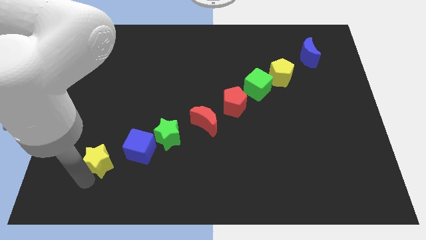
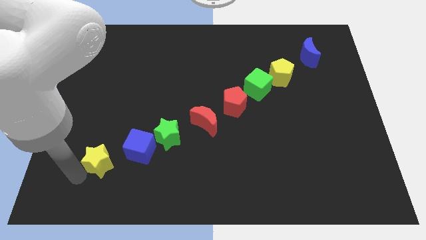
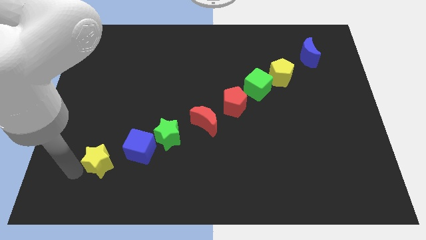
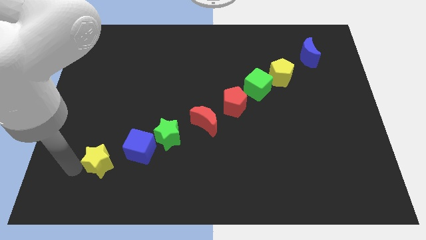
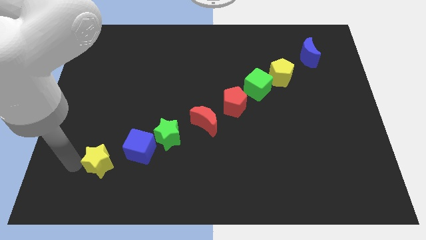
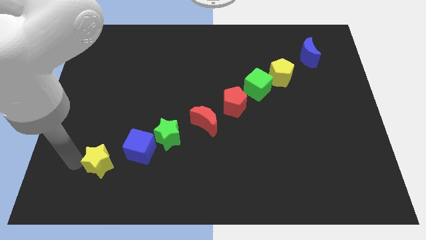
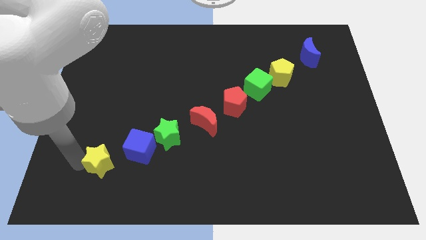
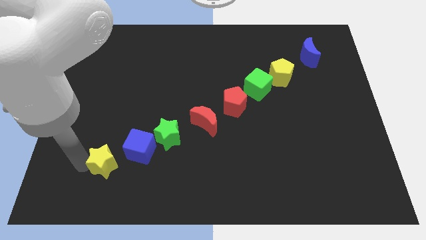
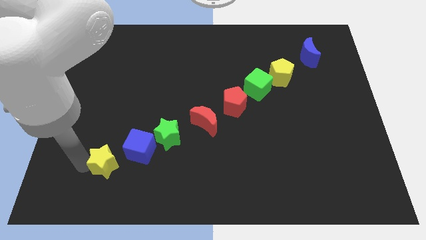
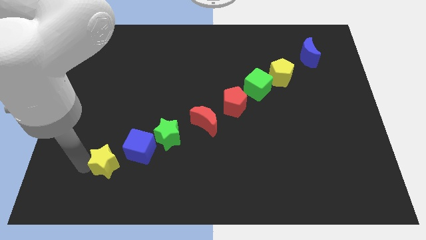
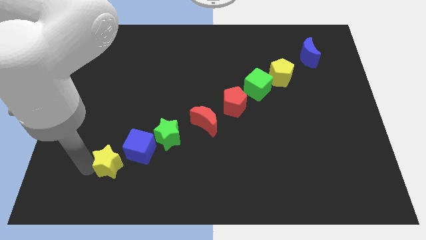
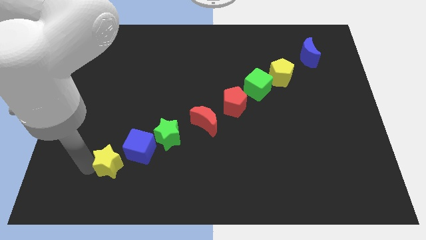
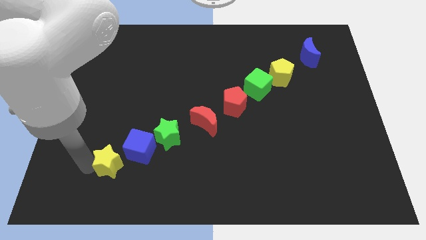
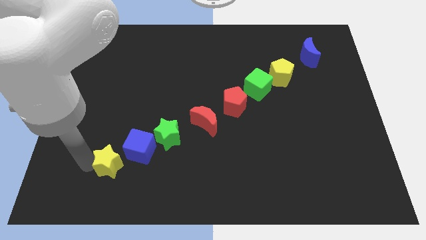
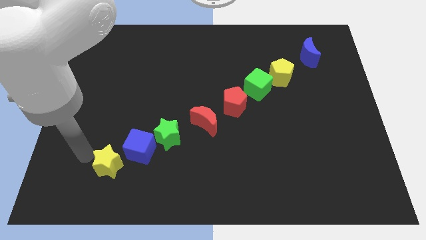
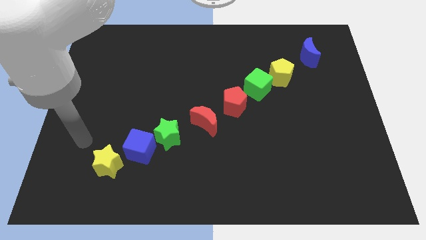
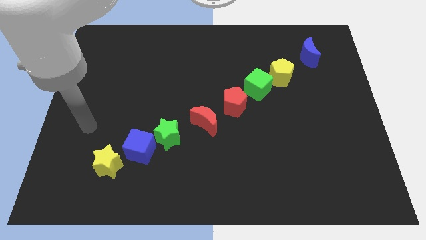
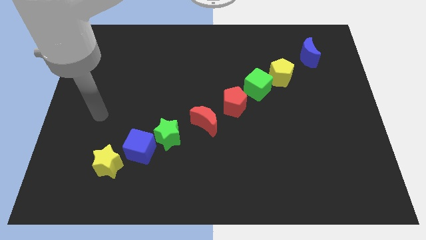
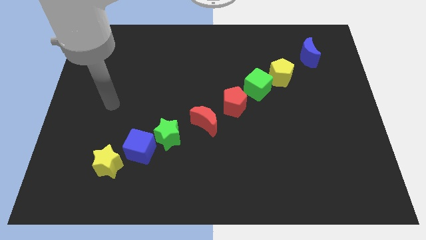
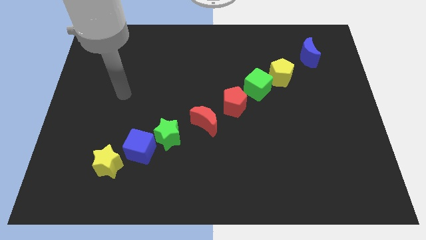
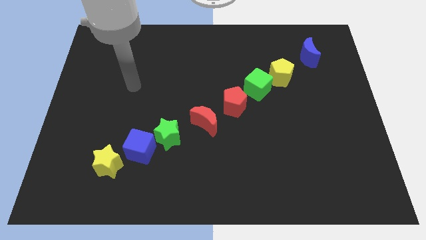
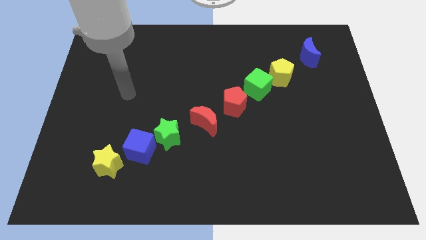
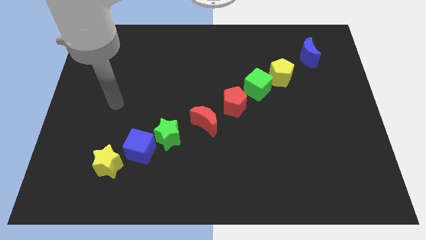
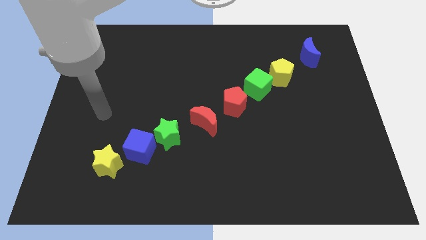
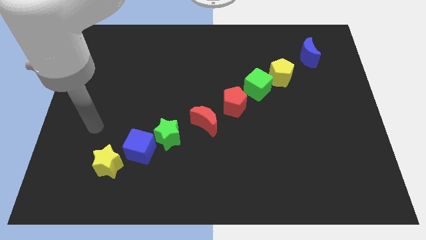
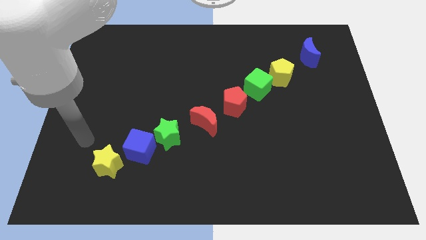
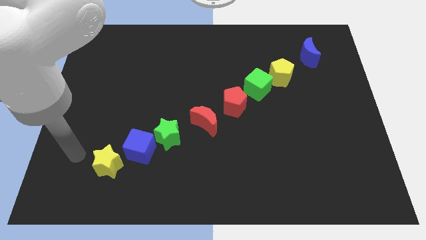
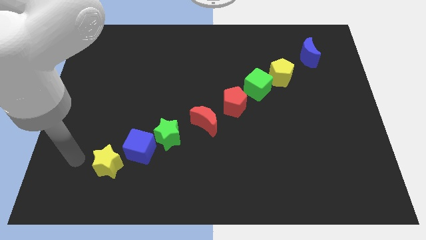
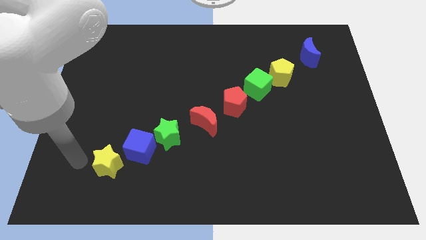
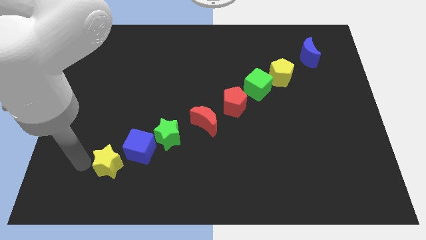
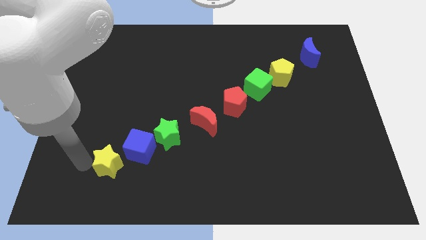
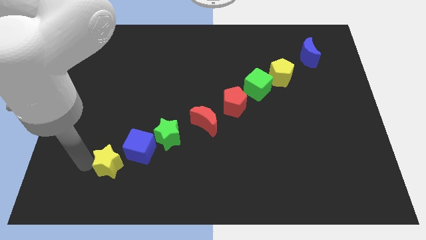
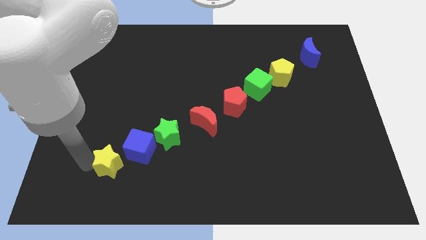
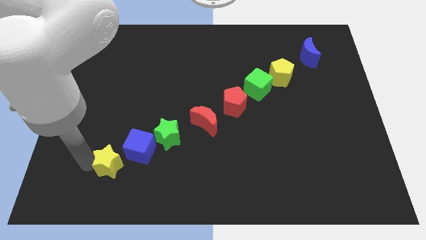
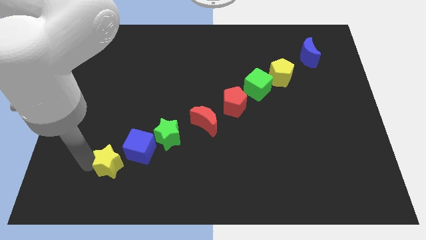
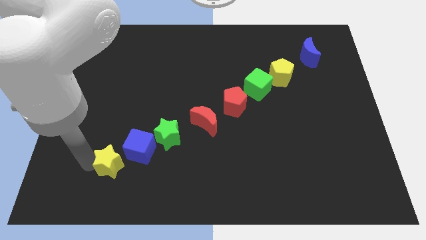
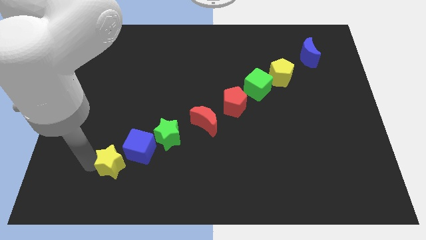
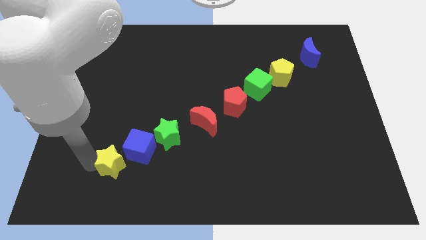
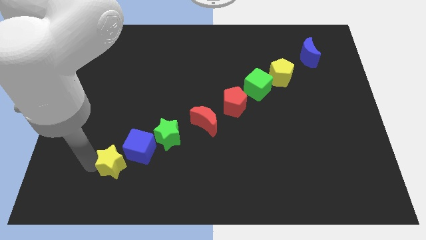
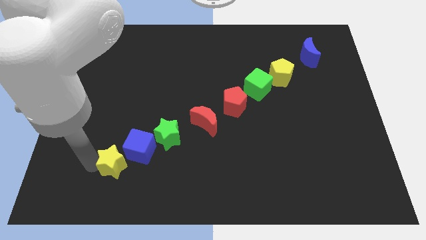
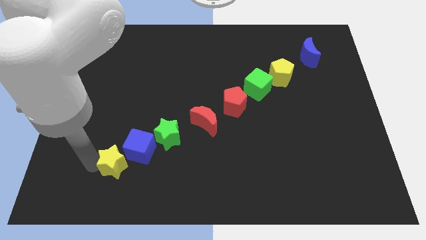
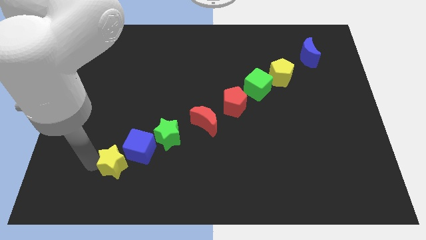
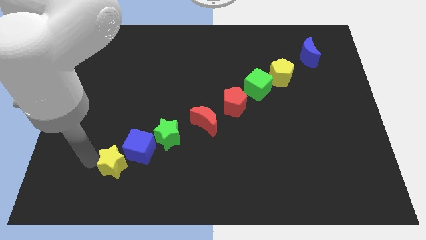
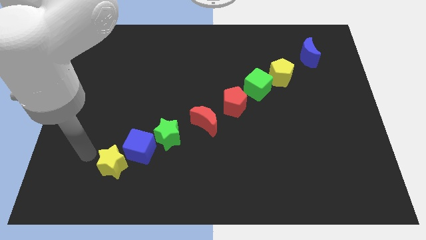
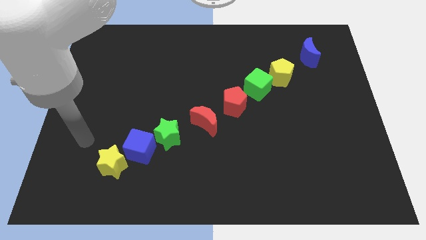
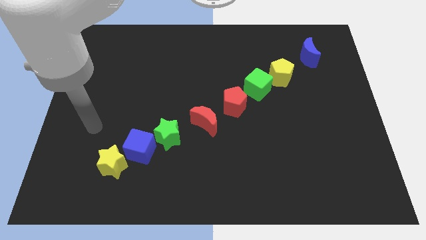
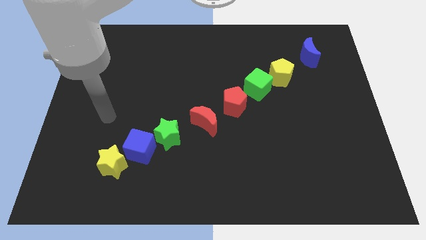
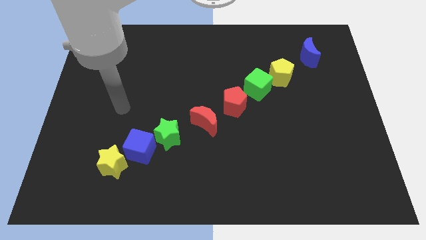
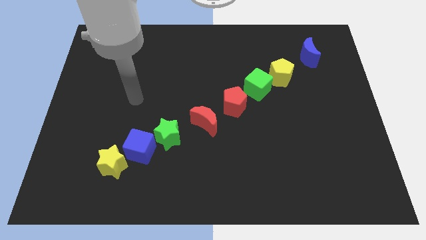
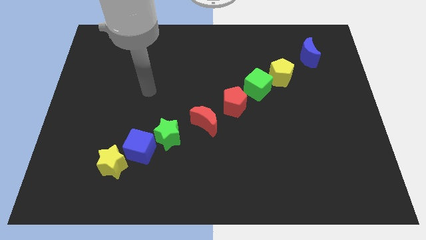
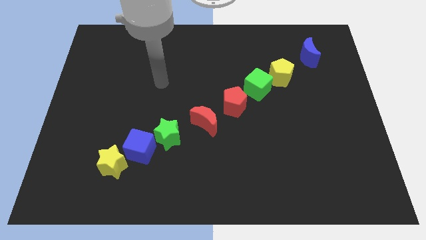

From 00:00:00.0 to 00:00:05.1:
put the yellow star at the bottom left of the blue cube

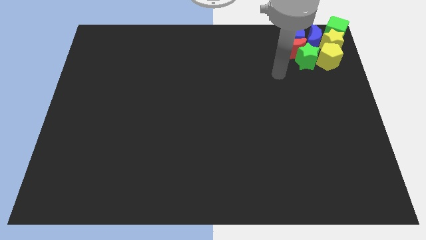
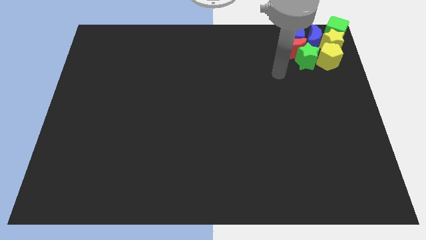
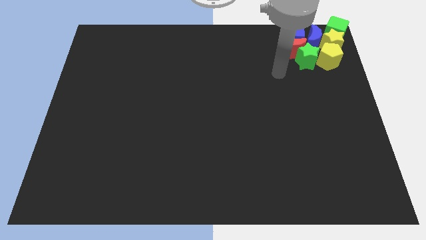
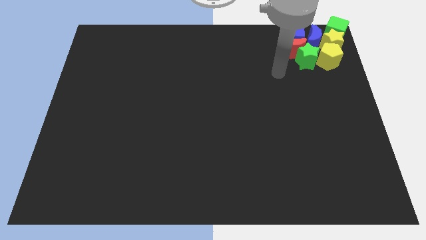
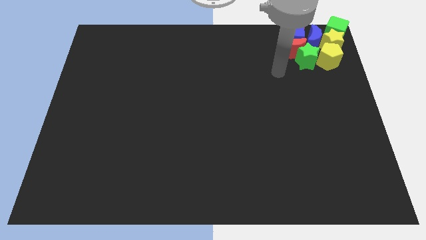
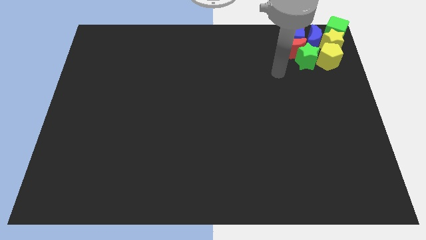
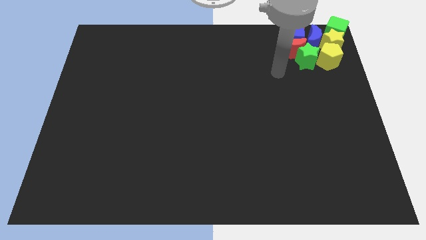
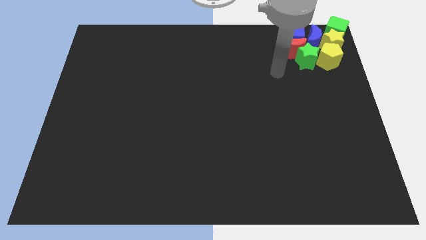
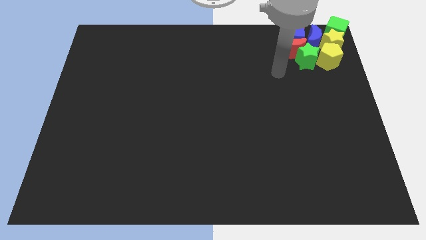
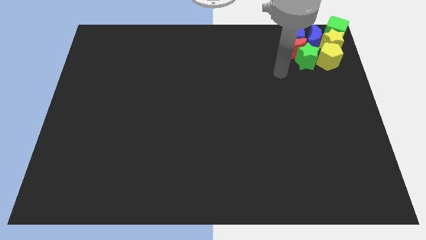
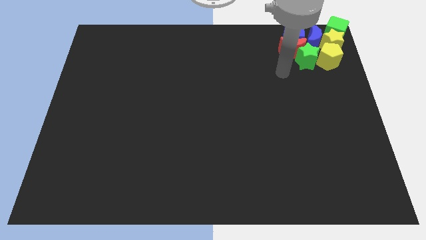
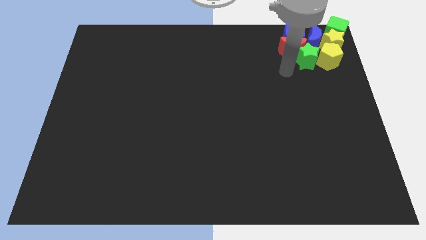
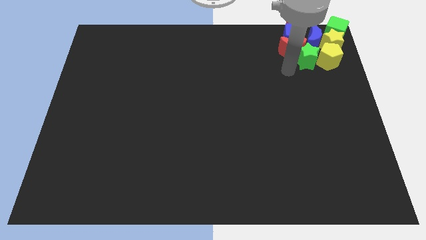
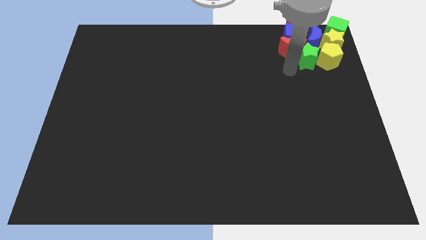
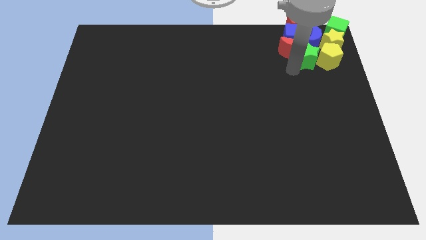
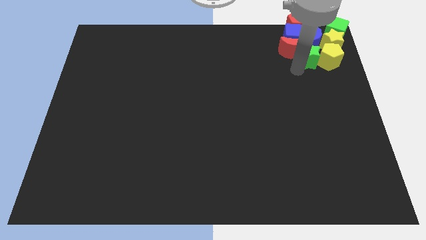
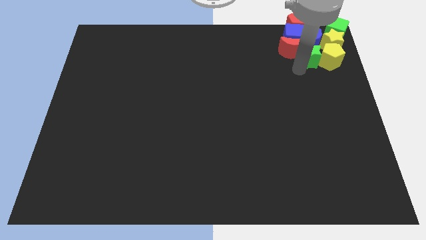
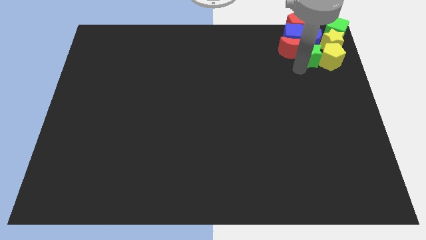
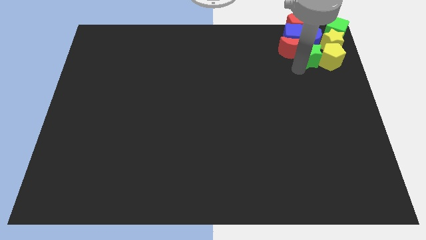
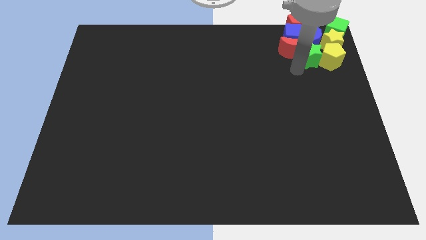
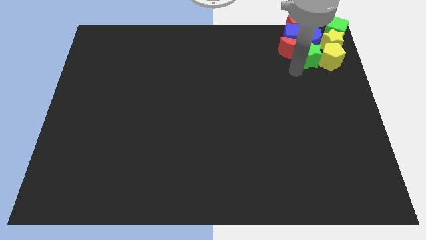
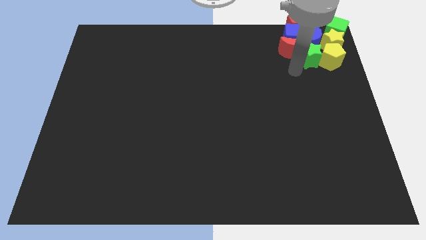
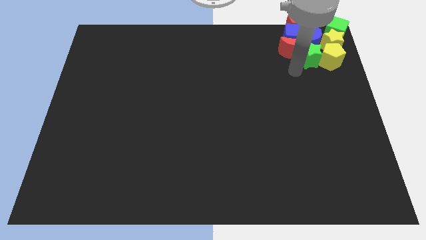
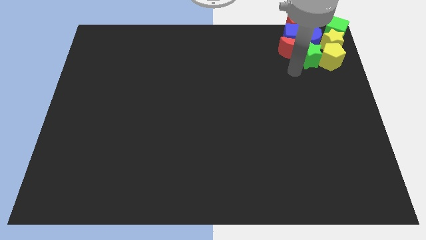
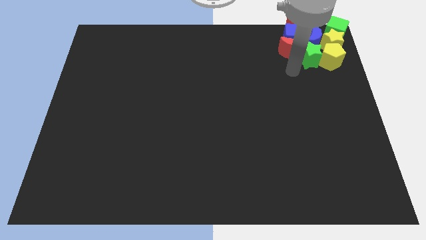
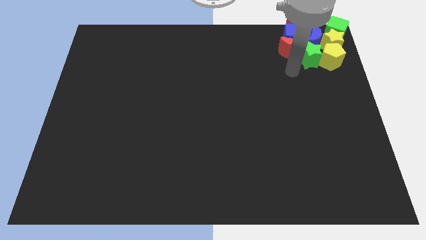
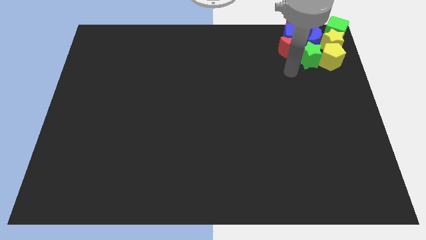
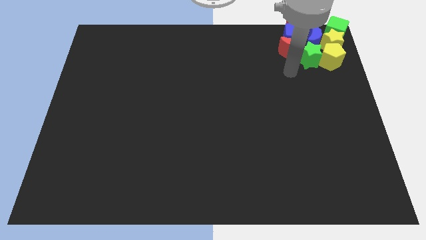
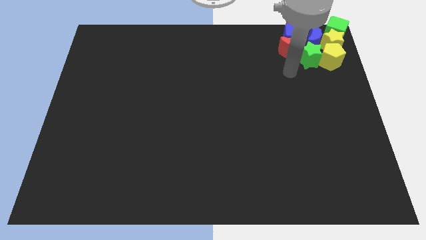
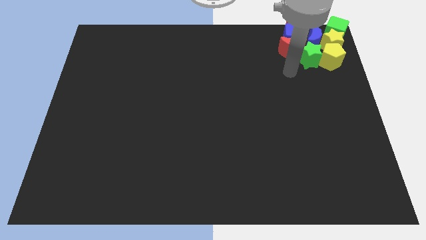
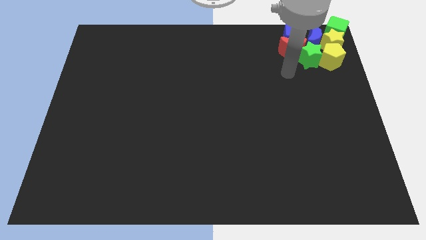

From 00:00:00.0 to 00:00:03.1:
push the green star slightly right

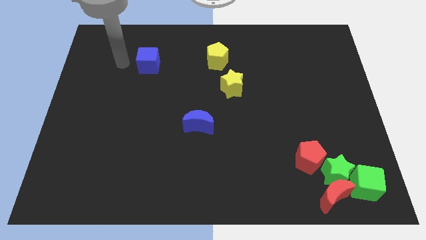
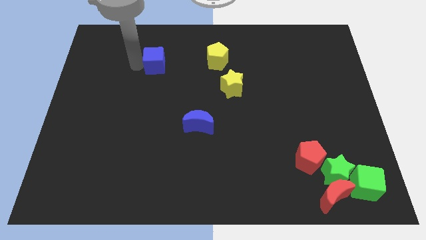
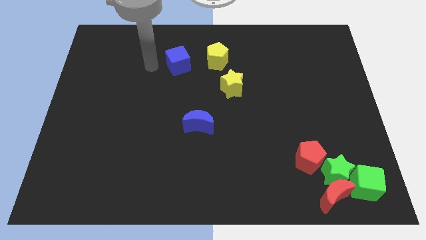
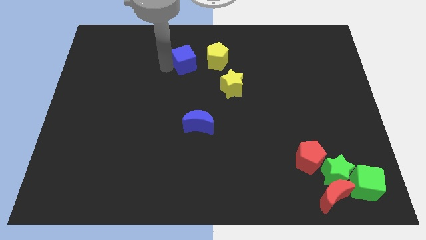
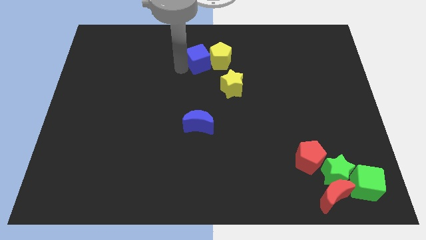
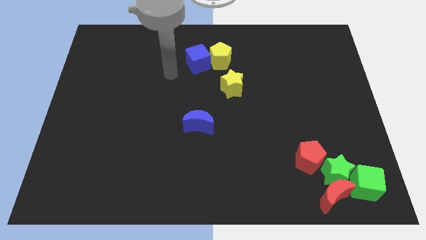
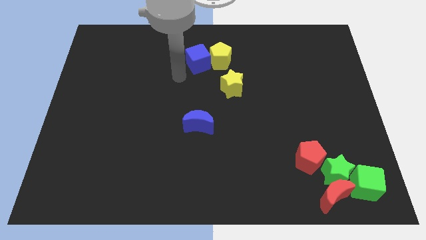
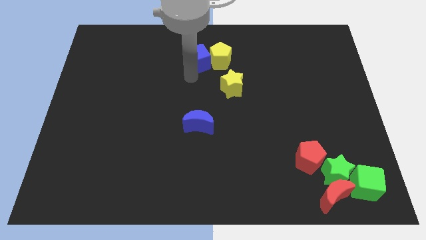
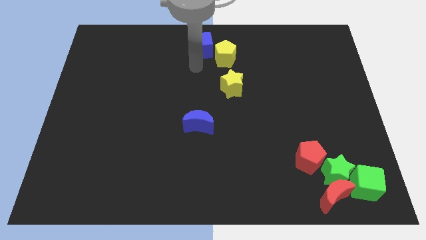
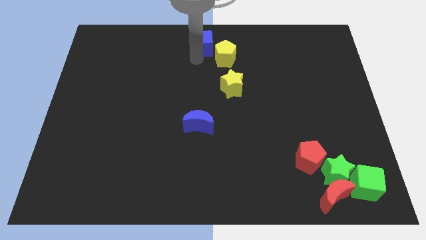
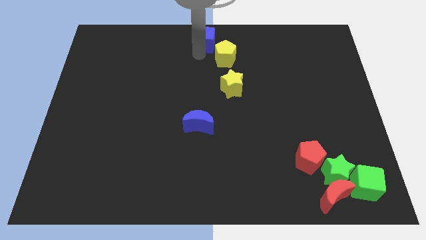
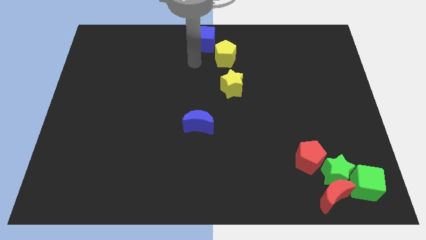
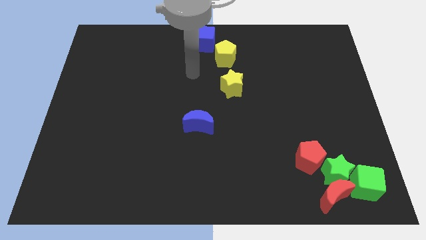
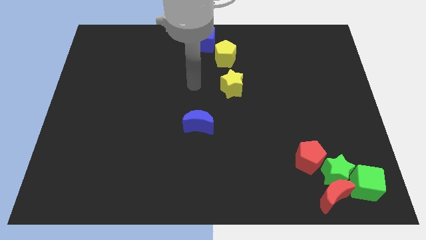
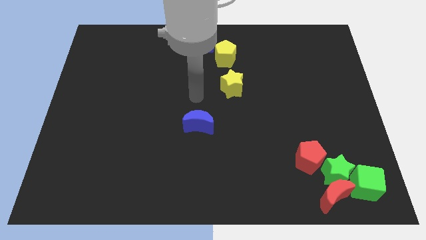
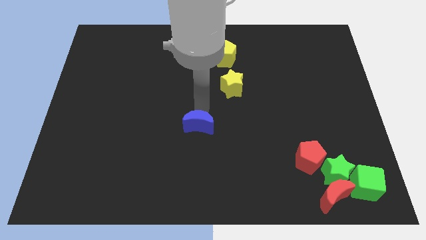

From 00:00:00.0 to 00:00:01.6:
move the blue cube to the top center of the board
